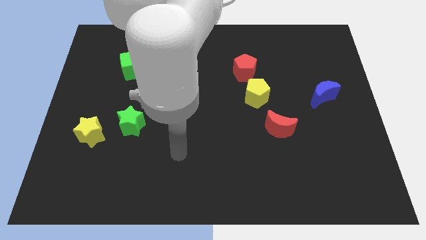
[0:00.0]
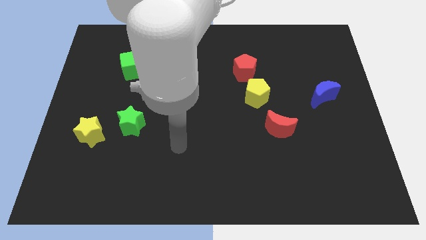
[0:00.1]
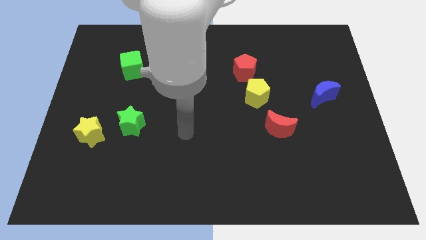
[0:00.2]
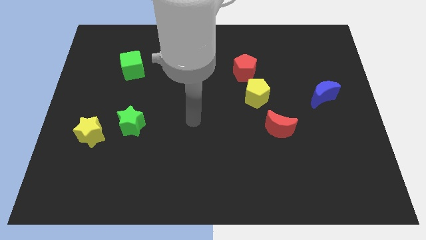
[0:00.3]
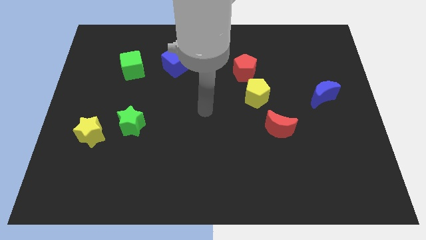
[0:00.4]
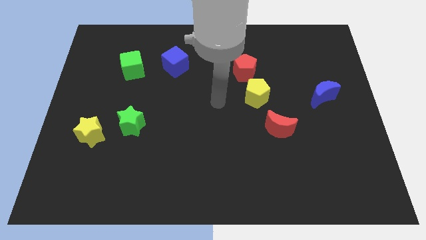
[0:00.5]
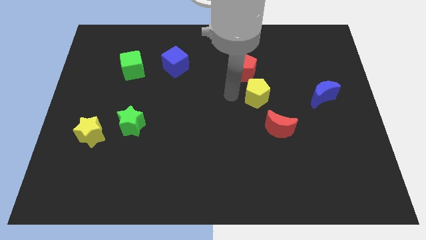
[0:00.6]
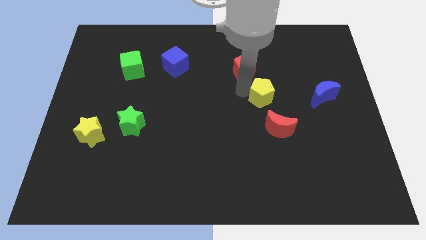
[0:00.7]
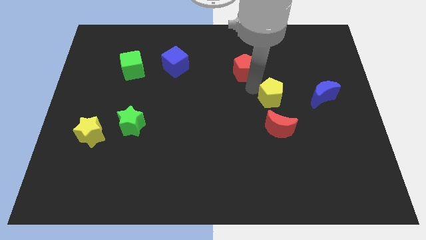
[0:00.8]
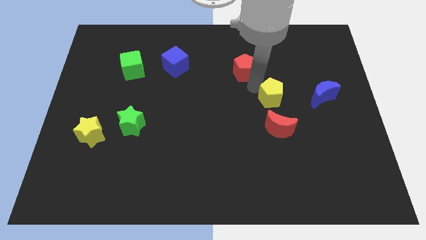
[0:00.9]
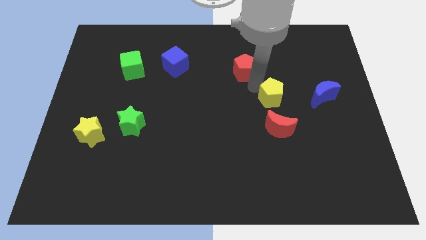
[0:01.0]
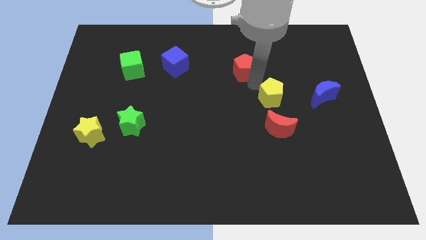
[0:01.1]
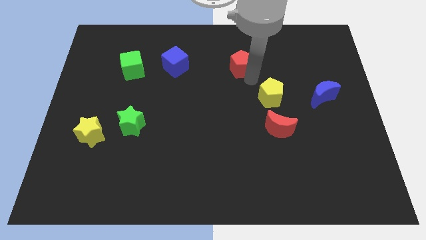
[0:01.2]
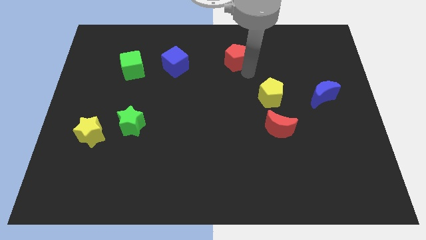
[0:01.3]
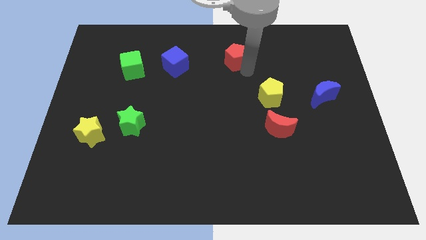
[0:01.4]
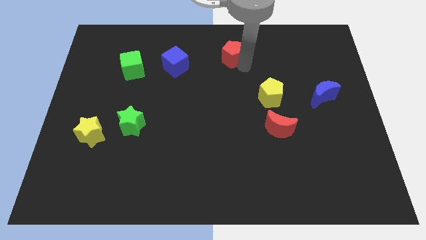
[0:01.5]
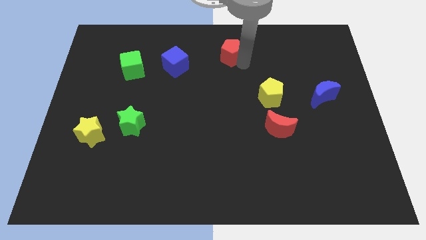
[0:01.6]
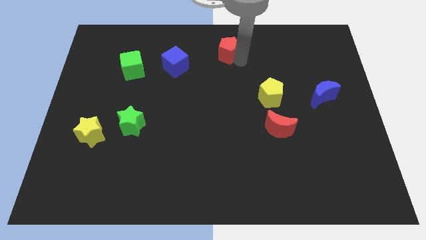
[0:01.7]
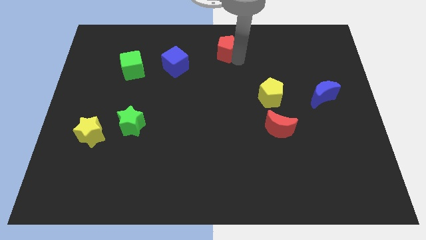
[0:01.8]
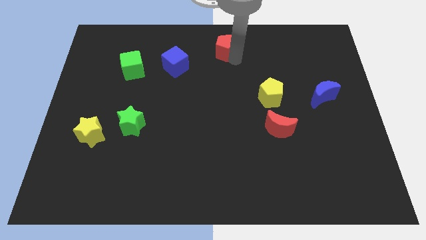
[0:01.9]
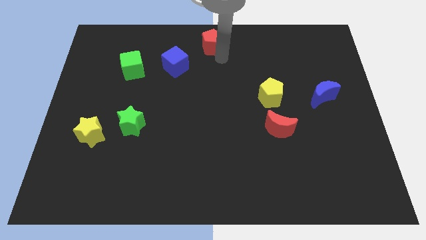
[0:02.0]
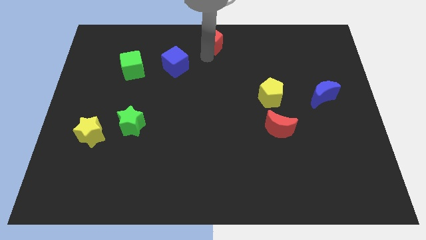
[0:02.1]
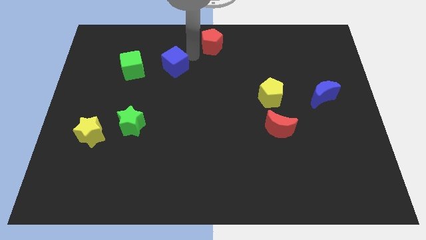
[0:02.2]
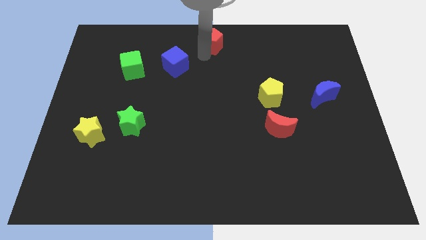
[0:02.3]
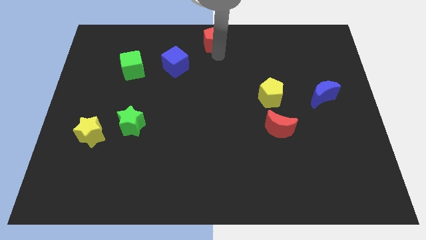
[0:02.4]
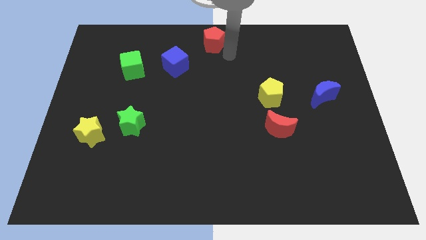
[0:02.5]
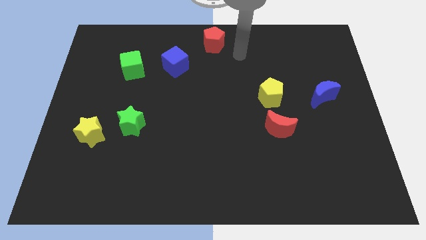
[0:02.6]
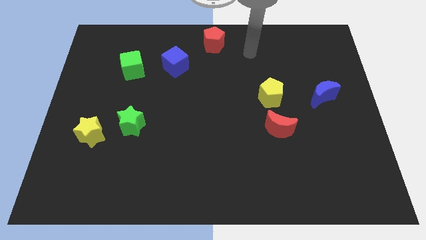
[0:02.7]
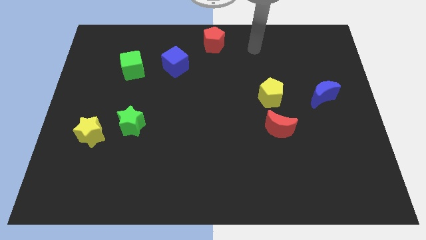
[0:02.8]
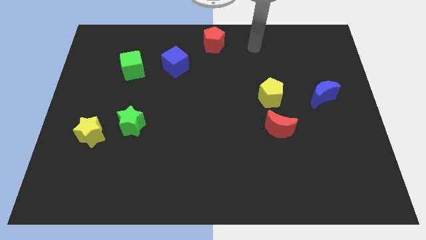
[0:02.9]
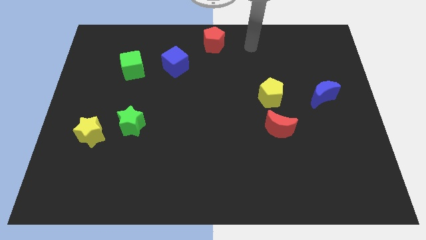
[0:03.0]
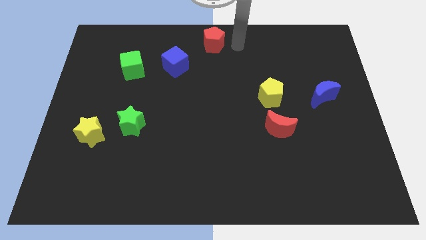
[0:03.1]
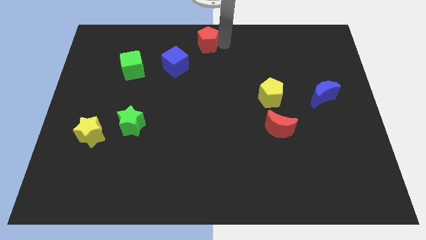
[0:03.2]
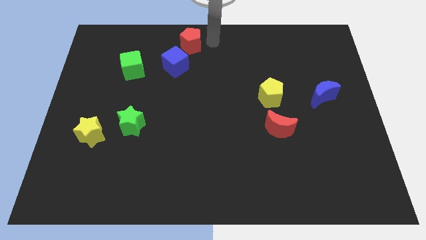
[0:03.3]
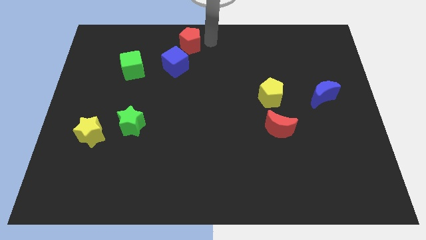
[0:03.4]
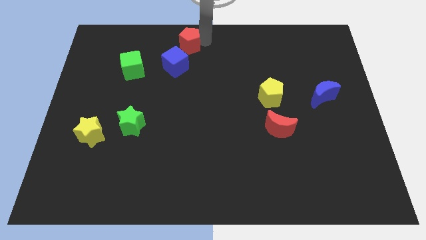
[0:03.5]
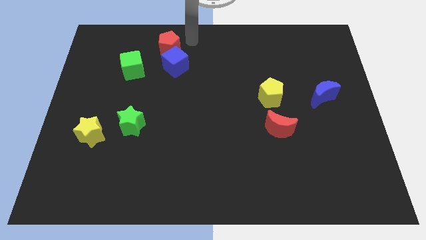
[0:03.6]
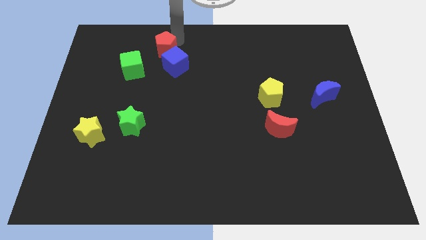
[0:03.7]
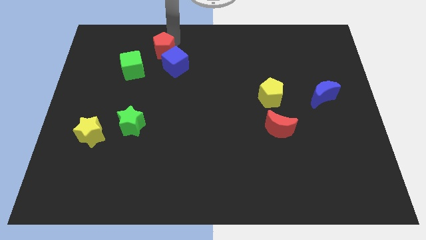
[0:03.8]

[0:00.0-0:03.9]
move the red pentagon to the top of the blue cube

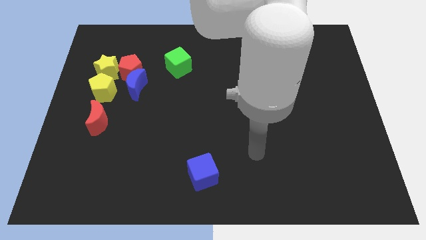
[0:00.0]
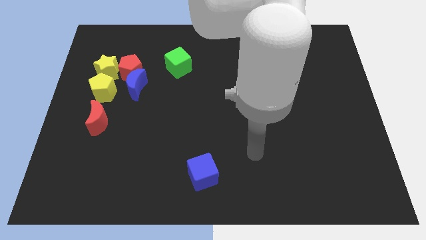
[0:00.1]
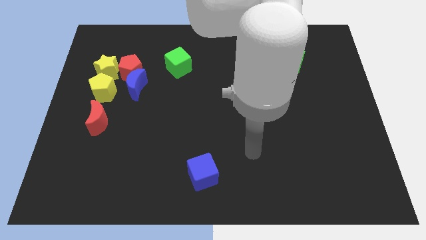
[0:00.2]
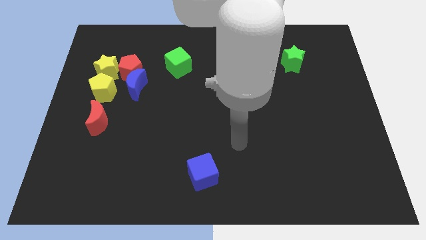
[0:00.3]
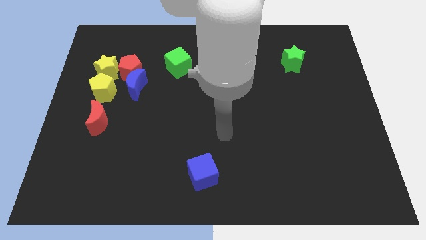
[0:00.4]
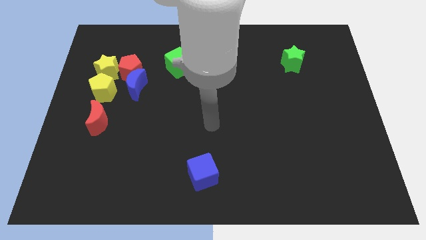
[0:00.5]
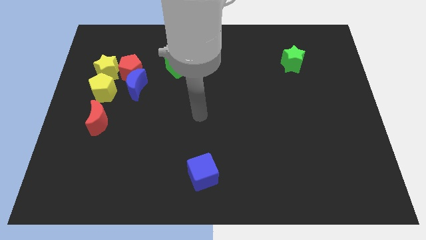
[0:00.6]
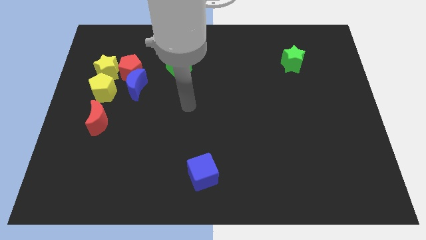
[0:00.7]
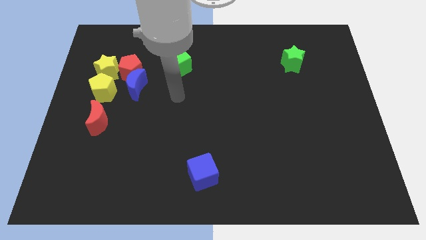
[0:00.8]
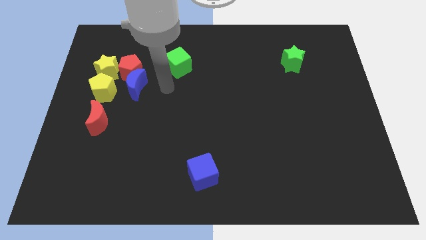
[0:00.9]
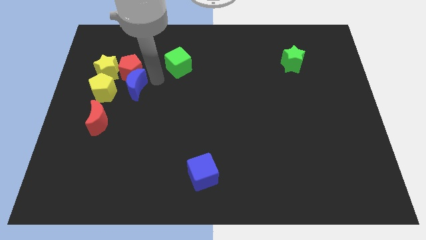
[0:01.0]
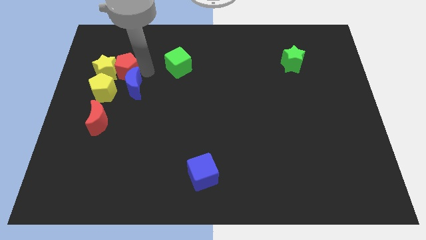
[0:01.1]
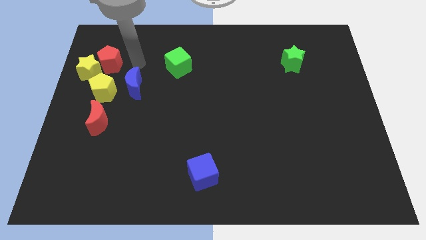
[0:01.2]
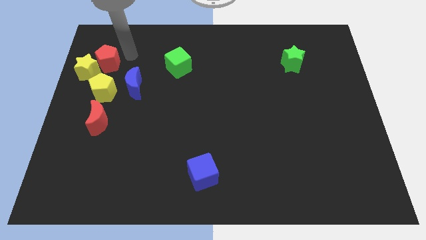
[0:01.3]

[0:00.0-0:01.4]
slightly move the red pentagon towards the left side

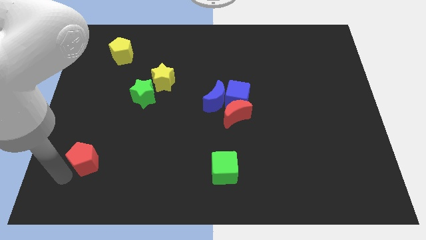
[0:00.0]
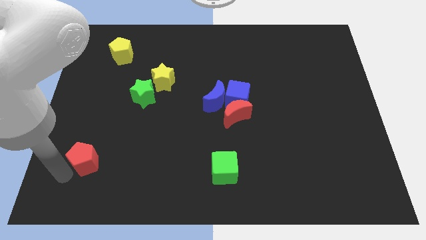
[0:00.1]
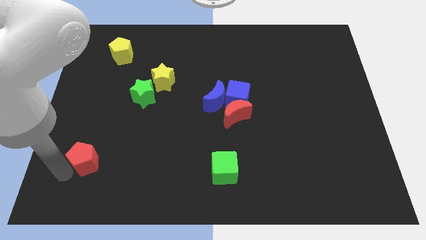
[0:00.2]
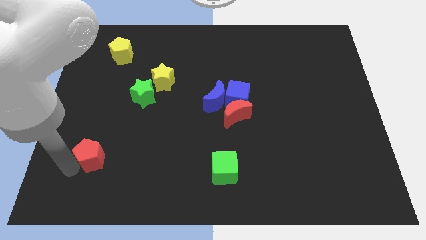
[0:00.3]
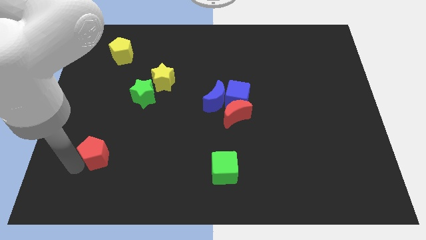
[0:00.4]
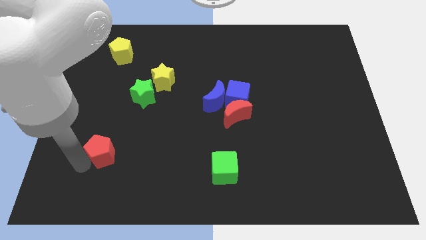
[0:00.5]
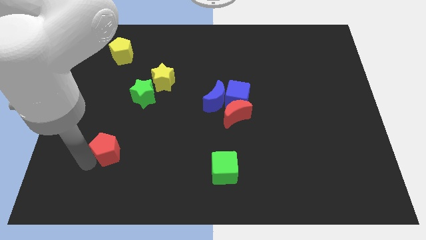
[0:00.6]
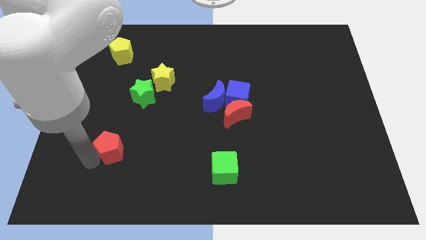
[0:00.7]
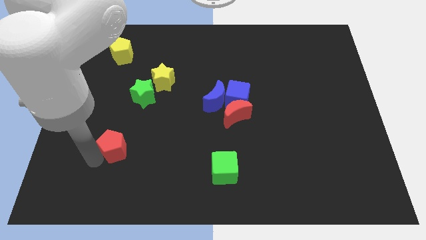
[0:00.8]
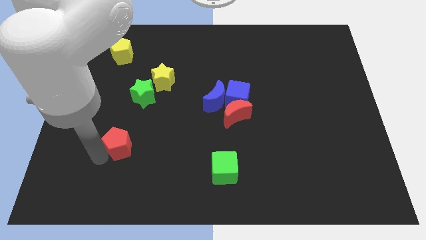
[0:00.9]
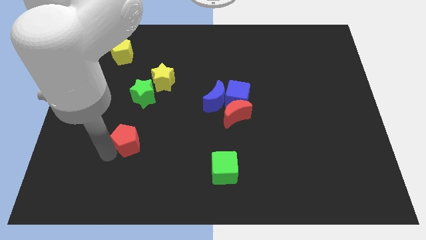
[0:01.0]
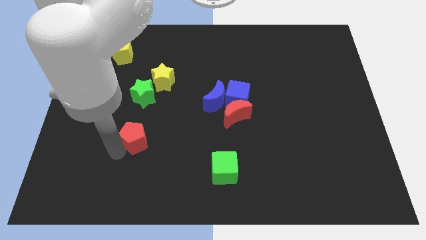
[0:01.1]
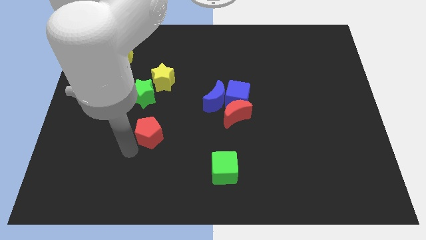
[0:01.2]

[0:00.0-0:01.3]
drag the red pentagon vertically to the bottom side of the green star

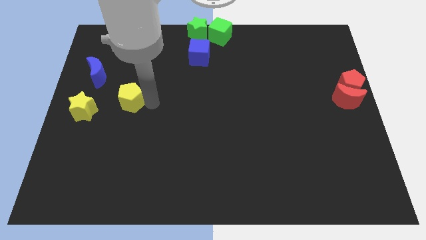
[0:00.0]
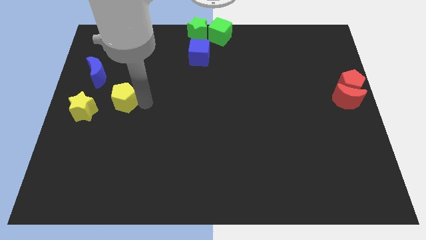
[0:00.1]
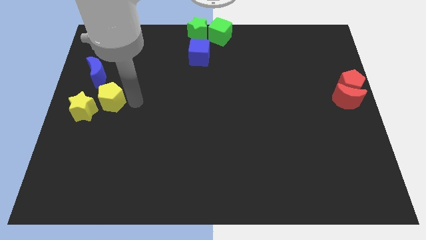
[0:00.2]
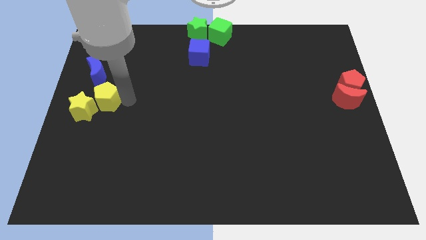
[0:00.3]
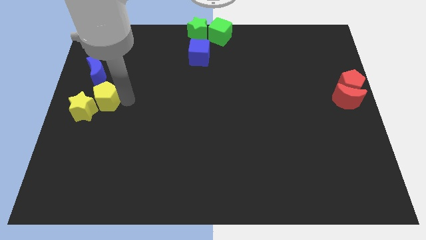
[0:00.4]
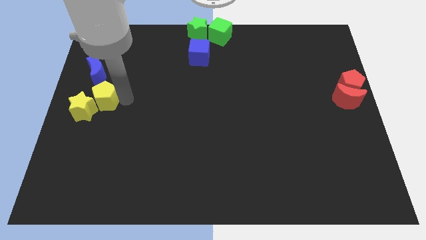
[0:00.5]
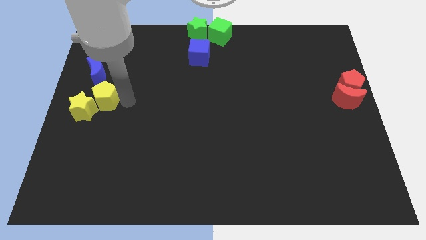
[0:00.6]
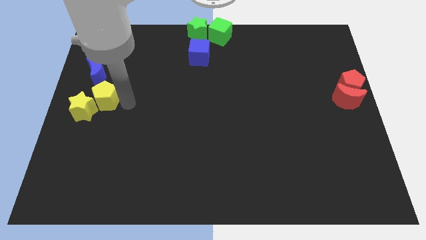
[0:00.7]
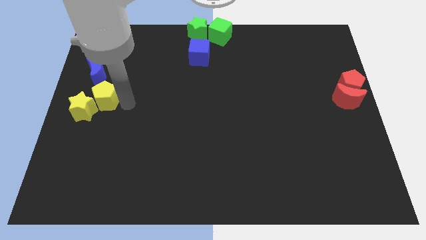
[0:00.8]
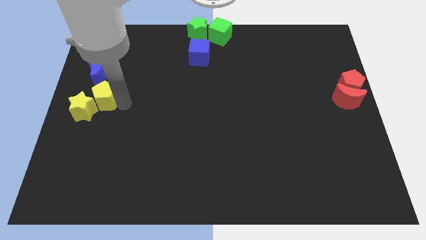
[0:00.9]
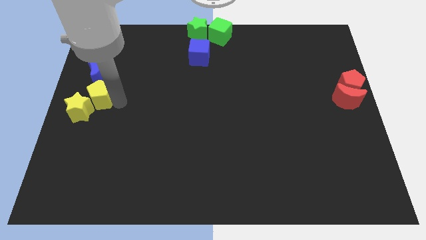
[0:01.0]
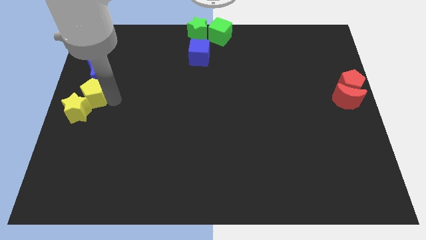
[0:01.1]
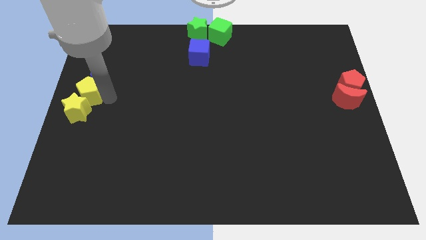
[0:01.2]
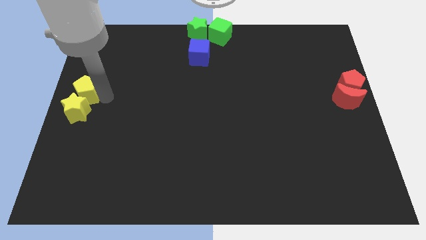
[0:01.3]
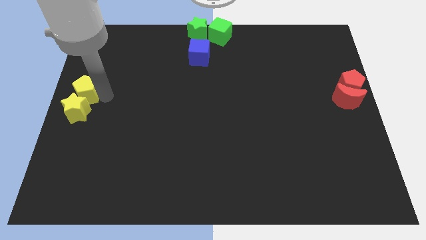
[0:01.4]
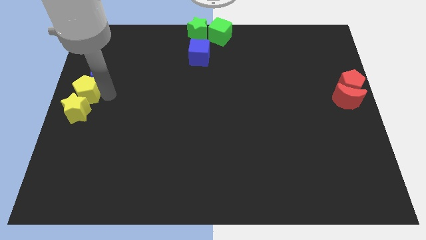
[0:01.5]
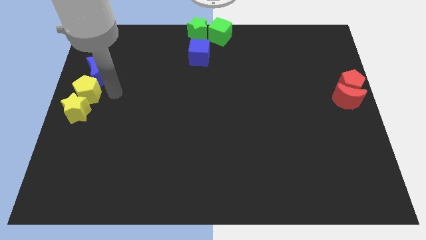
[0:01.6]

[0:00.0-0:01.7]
push the yellow pentagon into the yellow star

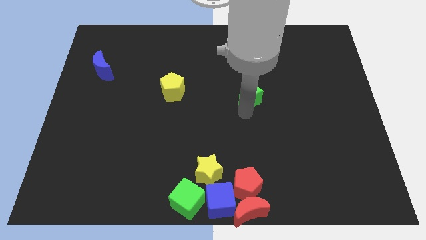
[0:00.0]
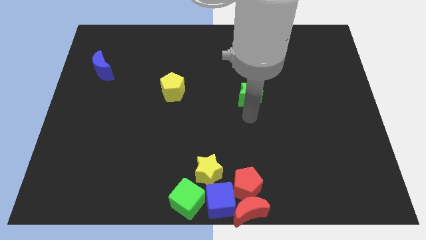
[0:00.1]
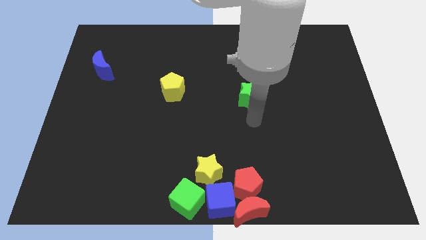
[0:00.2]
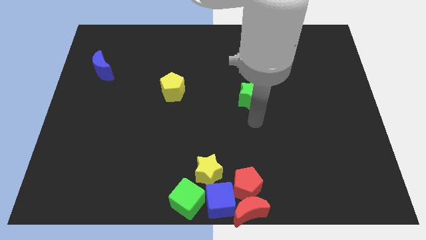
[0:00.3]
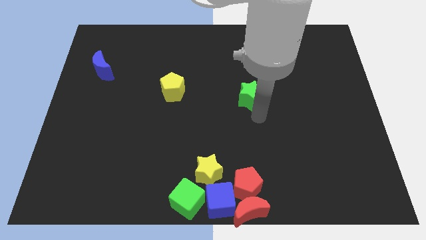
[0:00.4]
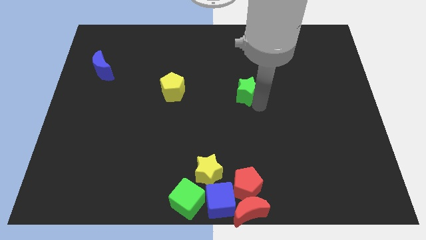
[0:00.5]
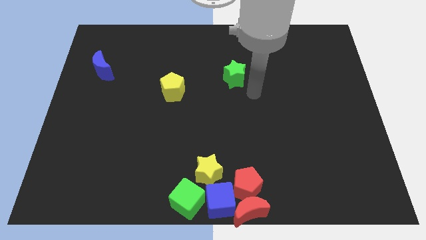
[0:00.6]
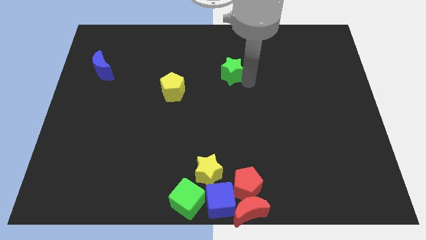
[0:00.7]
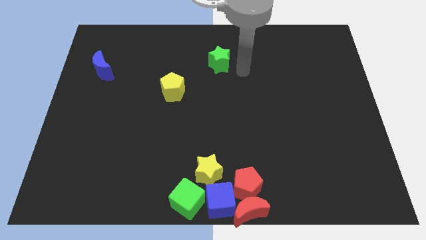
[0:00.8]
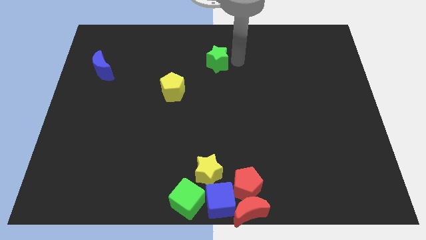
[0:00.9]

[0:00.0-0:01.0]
push green star above yellow star
